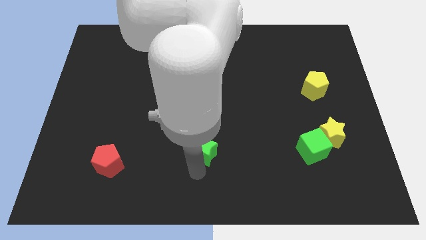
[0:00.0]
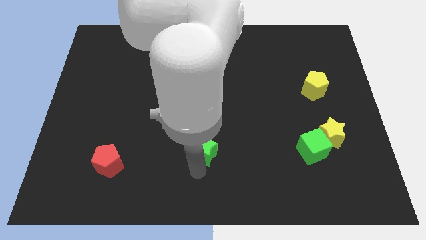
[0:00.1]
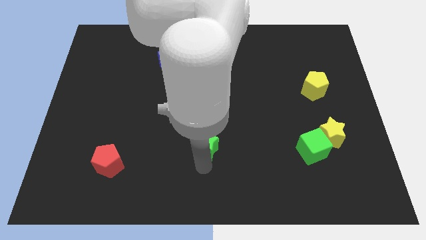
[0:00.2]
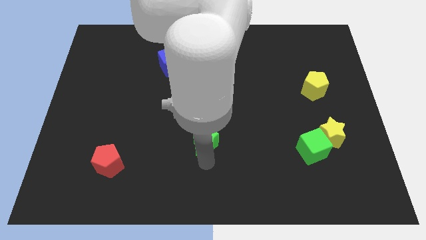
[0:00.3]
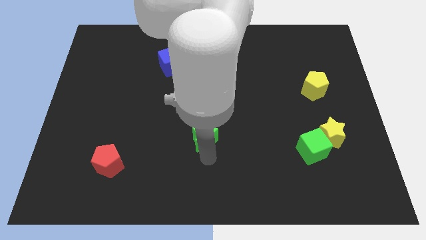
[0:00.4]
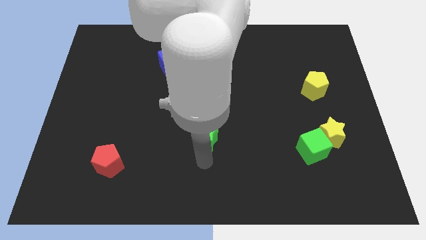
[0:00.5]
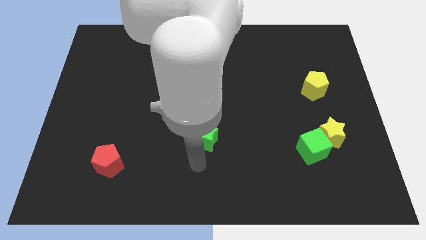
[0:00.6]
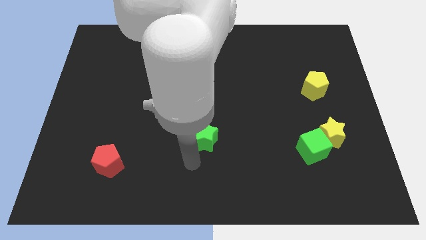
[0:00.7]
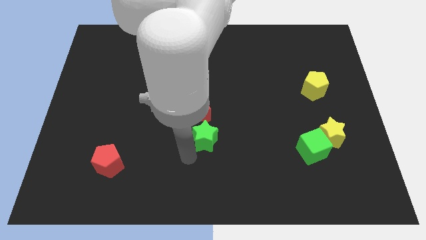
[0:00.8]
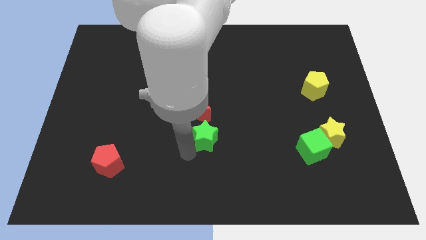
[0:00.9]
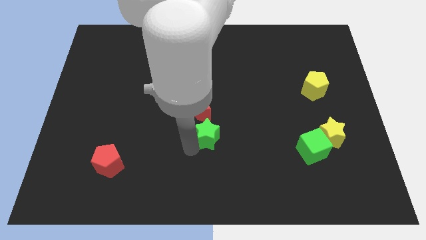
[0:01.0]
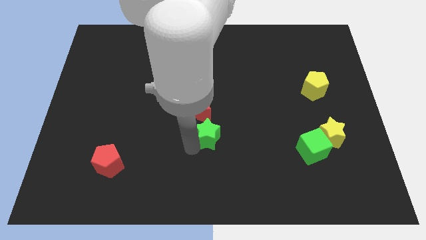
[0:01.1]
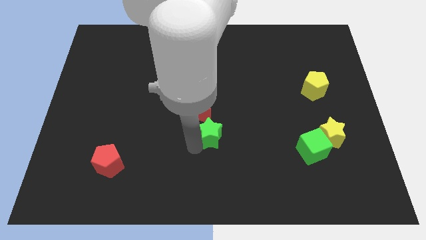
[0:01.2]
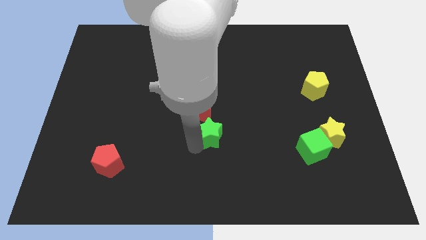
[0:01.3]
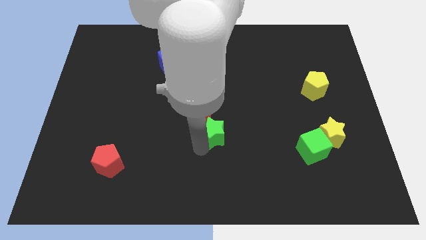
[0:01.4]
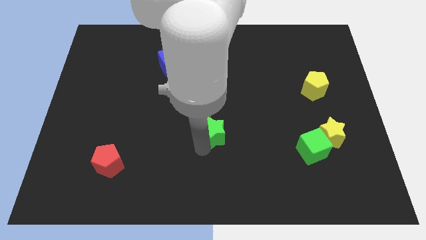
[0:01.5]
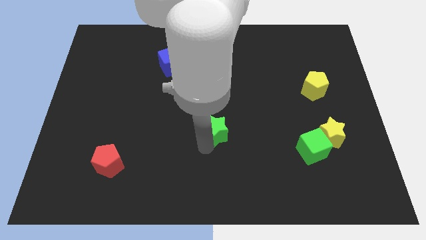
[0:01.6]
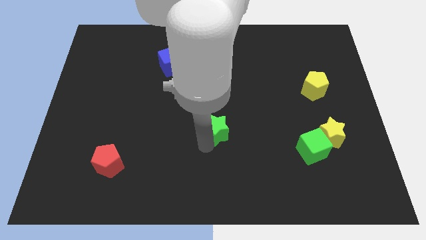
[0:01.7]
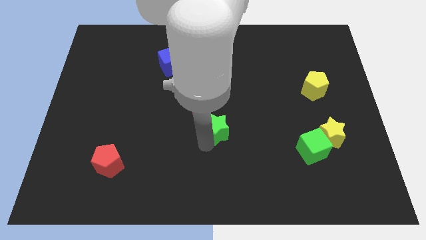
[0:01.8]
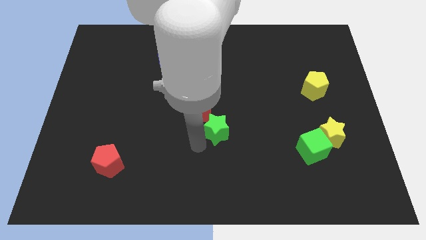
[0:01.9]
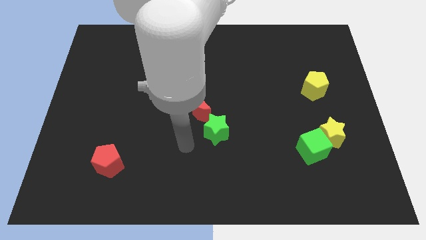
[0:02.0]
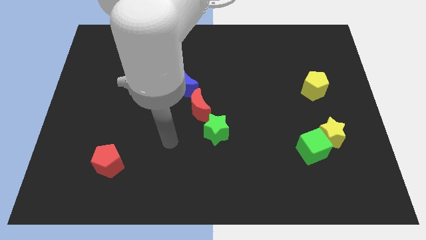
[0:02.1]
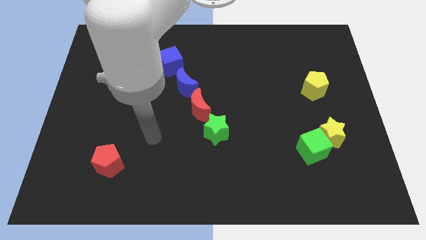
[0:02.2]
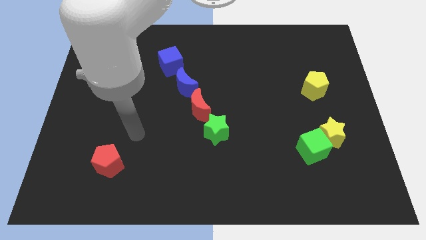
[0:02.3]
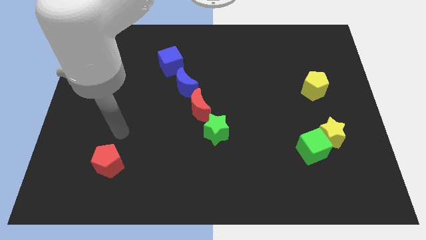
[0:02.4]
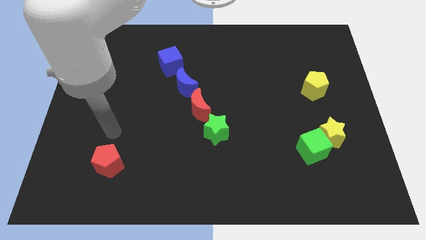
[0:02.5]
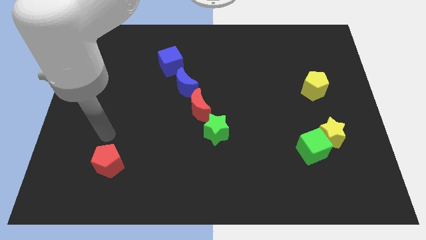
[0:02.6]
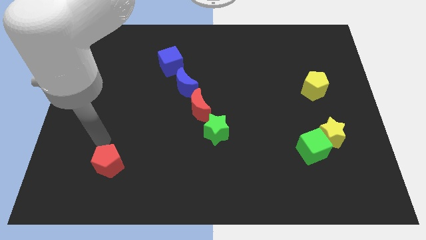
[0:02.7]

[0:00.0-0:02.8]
move the green star at the bottom right of the red moon

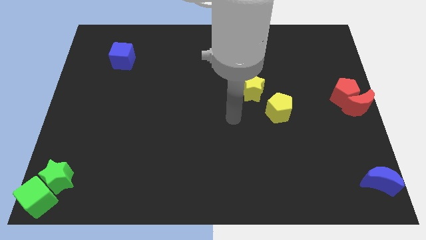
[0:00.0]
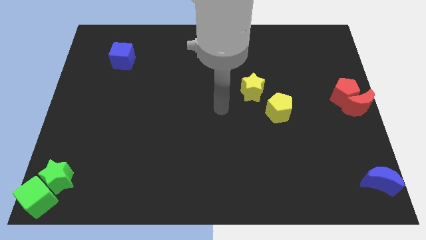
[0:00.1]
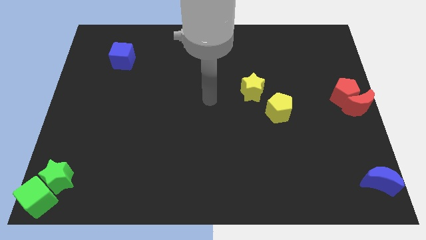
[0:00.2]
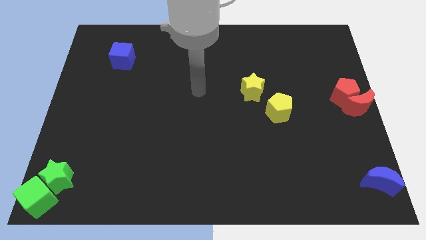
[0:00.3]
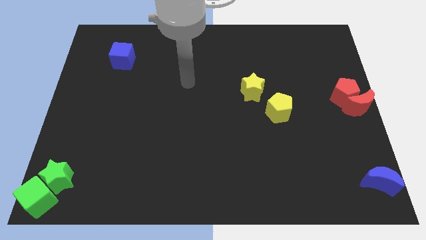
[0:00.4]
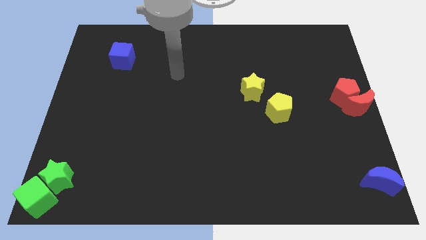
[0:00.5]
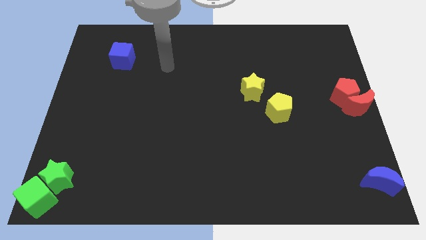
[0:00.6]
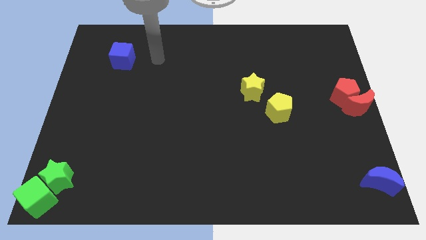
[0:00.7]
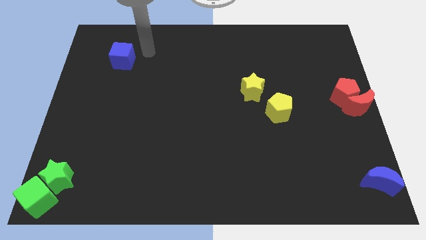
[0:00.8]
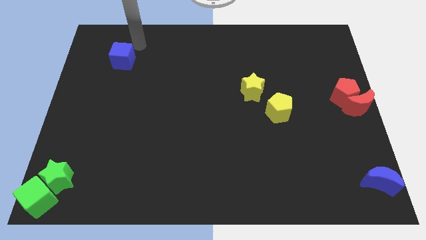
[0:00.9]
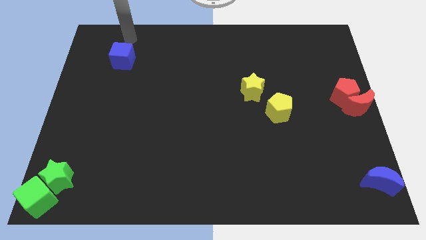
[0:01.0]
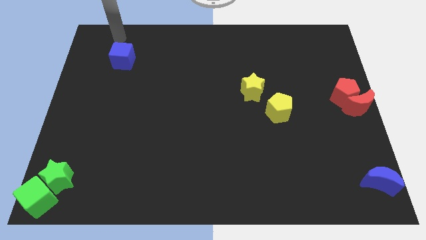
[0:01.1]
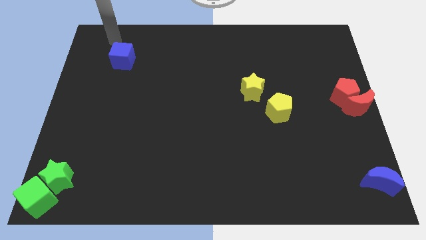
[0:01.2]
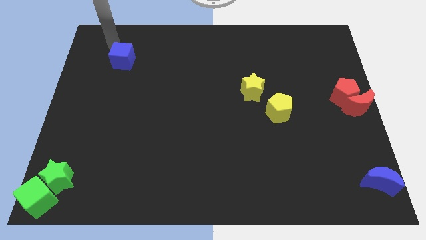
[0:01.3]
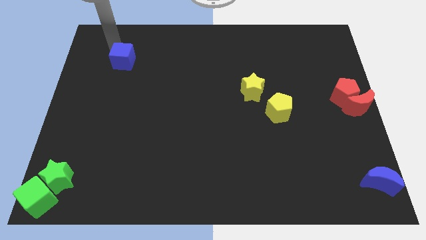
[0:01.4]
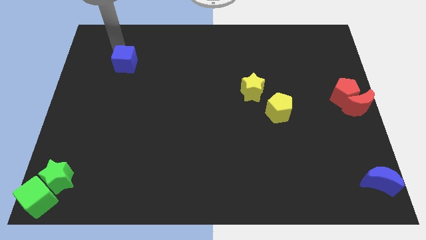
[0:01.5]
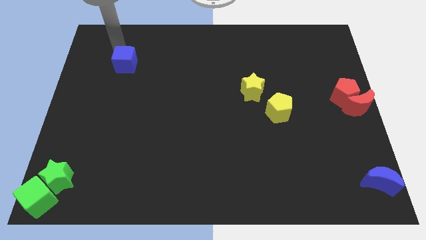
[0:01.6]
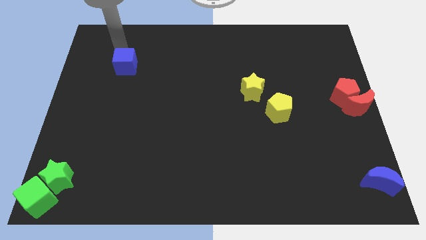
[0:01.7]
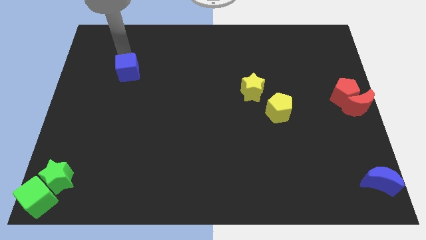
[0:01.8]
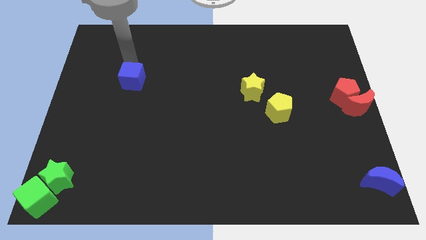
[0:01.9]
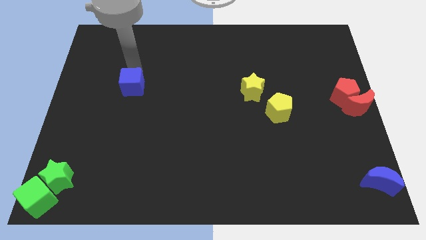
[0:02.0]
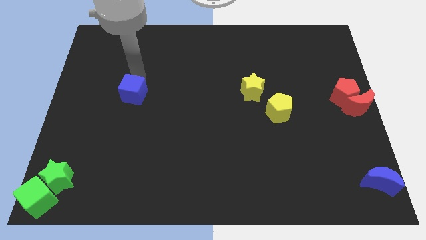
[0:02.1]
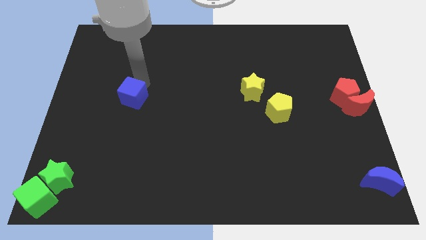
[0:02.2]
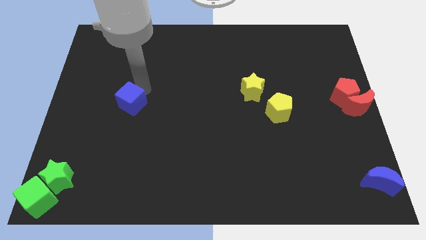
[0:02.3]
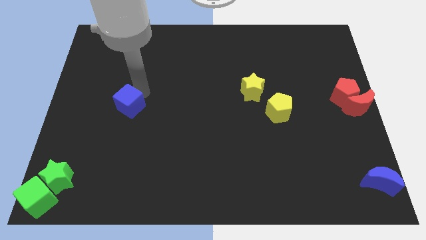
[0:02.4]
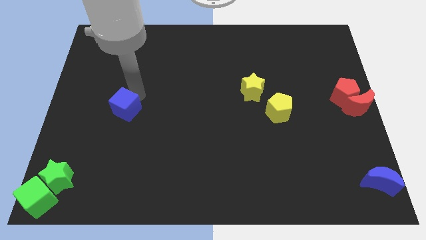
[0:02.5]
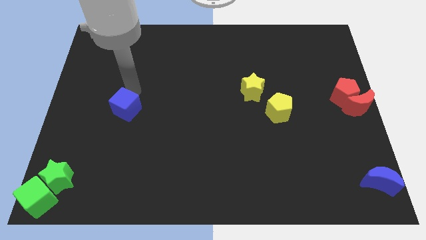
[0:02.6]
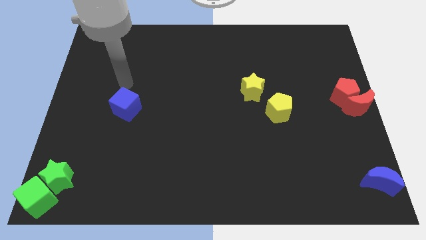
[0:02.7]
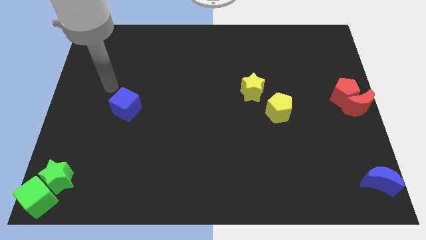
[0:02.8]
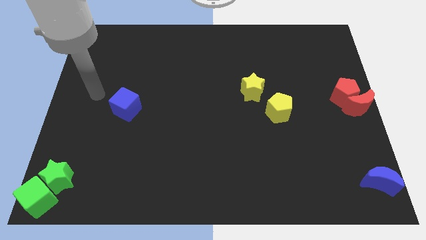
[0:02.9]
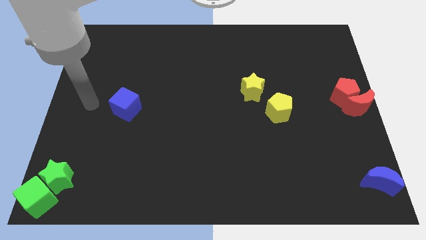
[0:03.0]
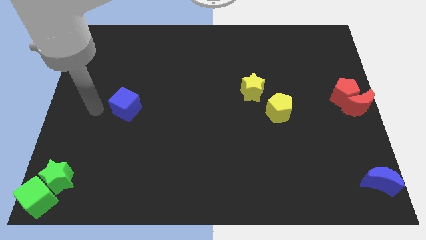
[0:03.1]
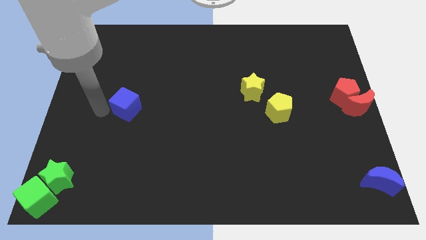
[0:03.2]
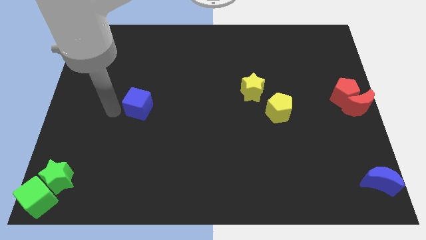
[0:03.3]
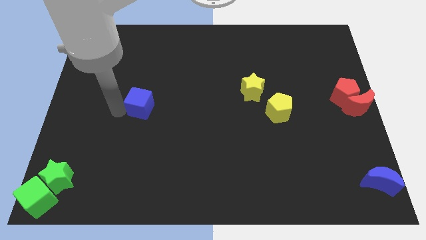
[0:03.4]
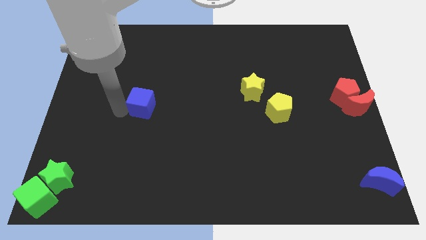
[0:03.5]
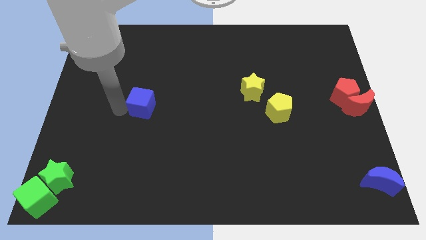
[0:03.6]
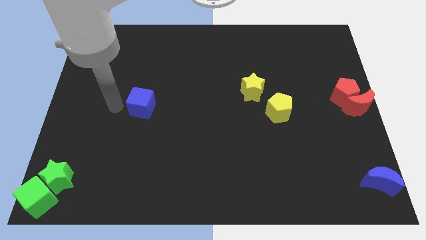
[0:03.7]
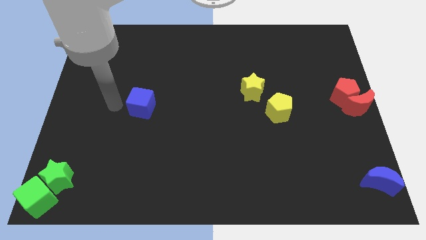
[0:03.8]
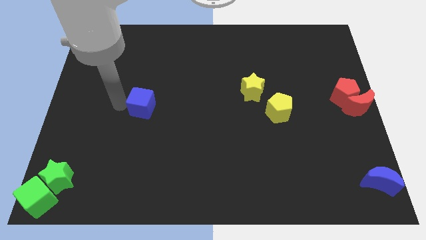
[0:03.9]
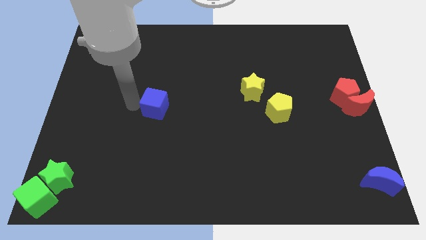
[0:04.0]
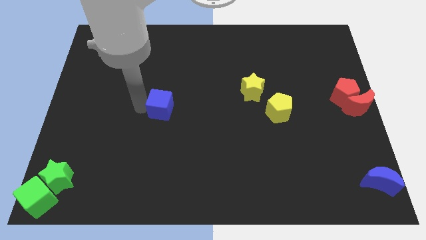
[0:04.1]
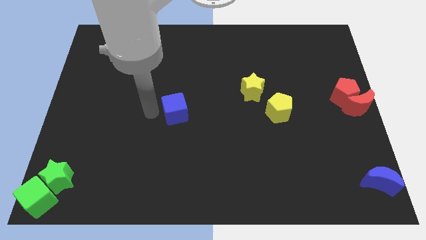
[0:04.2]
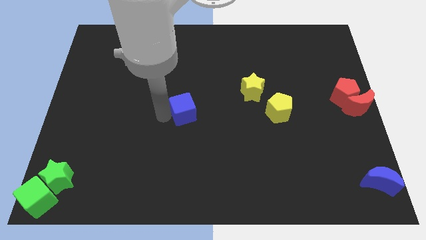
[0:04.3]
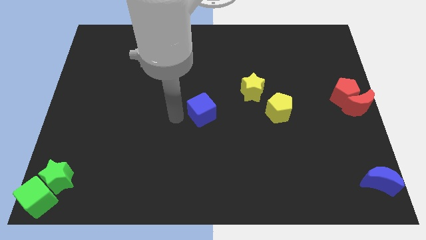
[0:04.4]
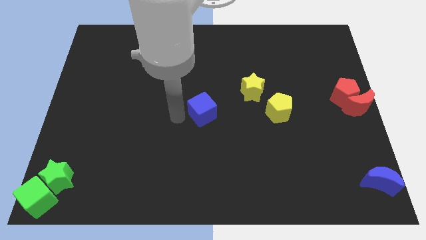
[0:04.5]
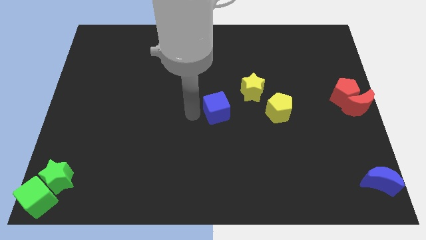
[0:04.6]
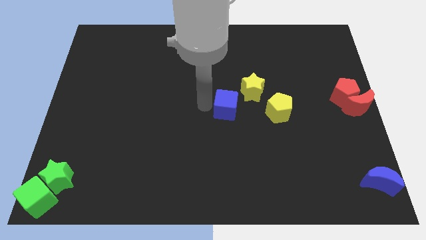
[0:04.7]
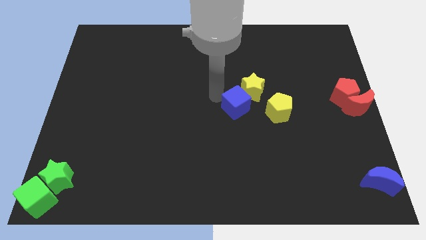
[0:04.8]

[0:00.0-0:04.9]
push the blue cube into the yellow star

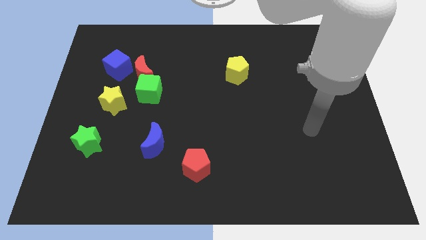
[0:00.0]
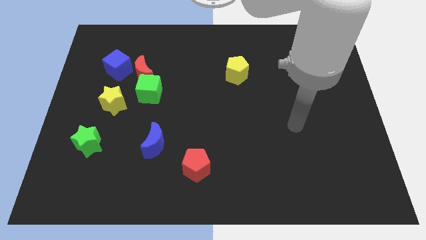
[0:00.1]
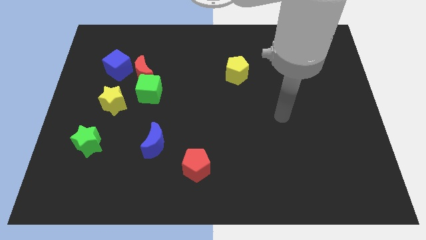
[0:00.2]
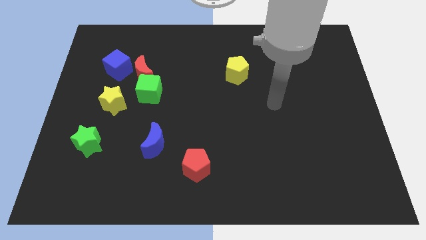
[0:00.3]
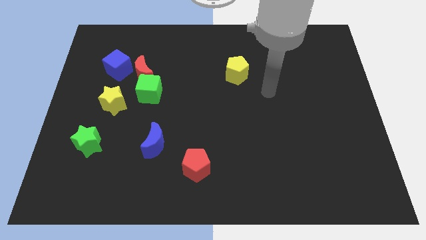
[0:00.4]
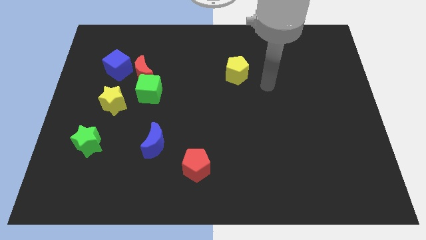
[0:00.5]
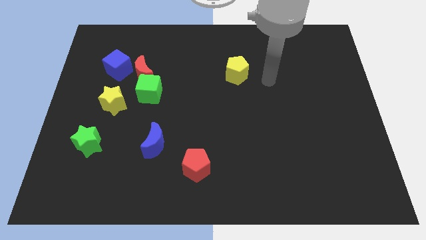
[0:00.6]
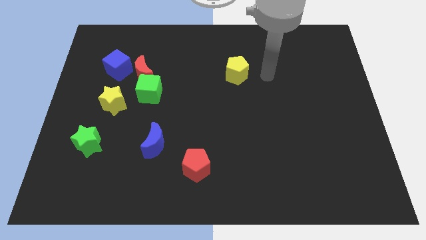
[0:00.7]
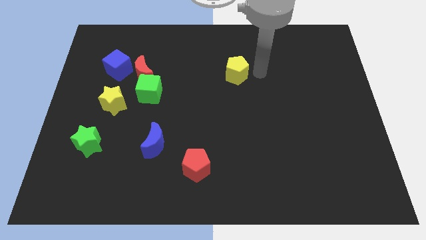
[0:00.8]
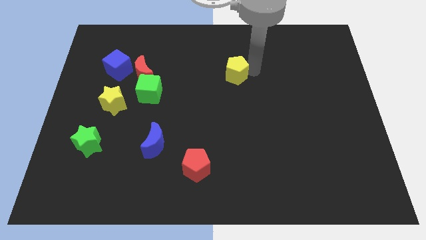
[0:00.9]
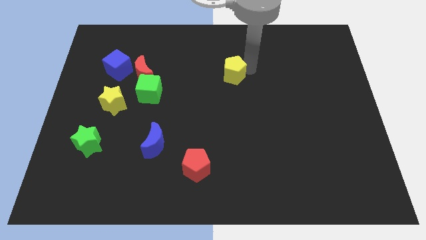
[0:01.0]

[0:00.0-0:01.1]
slightly push the yellow pentagon on the board
